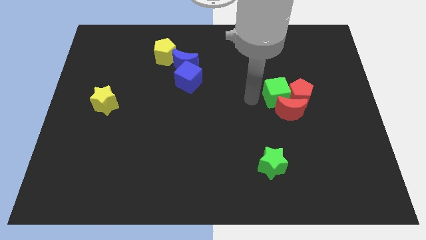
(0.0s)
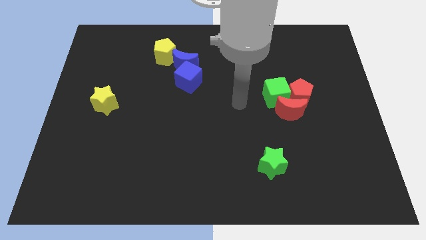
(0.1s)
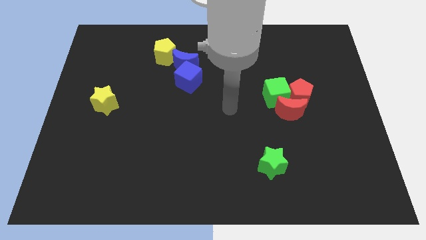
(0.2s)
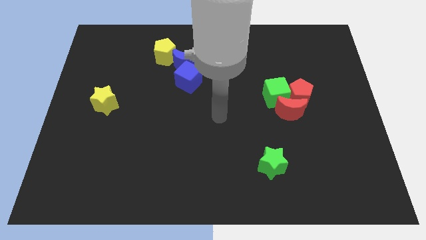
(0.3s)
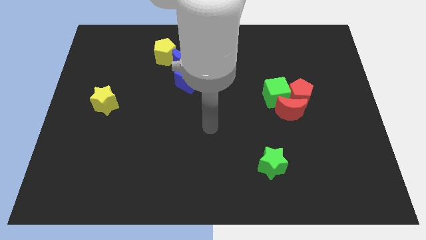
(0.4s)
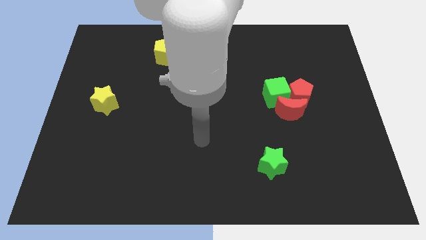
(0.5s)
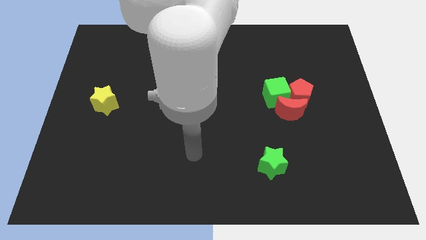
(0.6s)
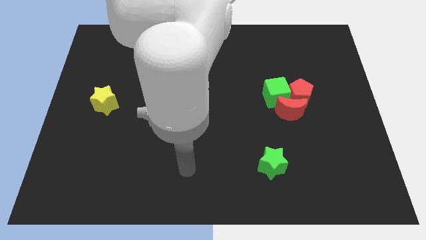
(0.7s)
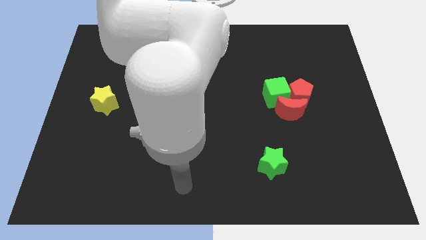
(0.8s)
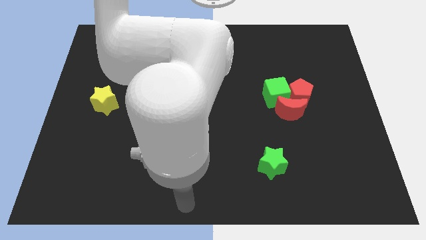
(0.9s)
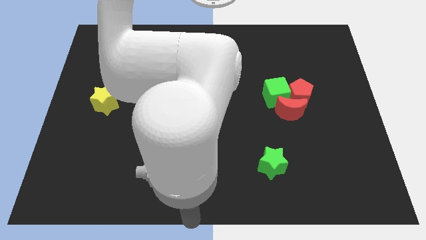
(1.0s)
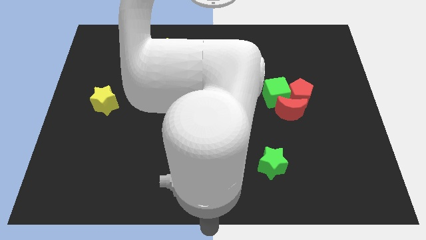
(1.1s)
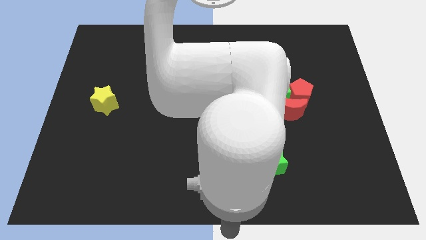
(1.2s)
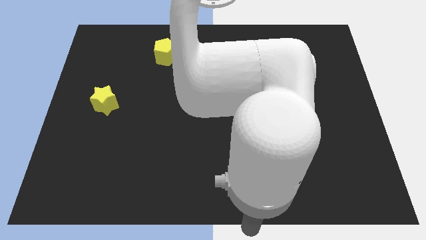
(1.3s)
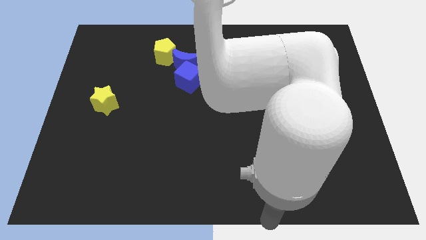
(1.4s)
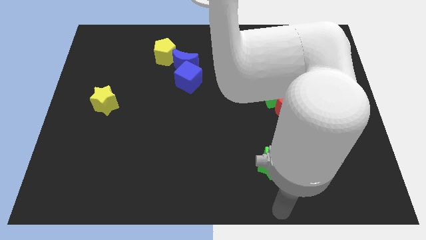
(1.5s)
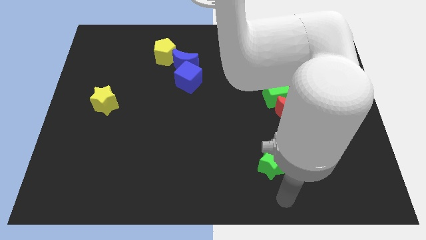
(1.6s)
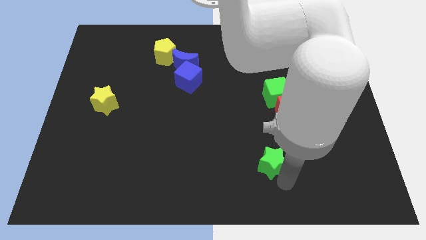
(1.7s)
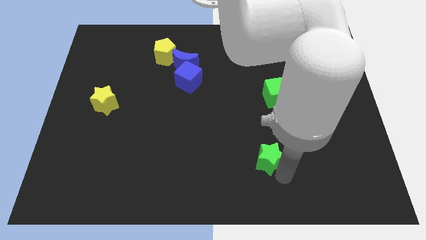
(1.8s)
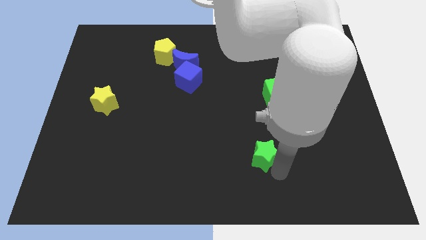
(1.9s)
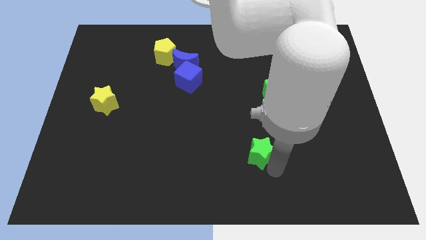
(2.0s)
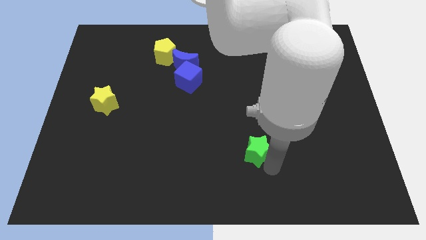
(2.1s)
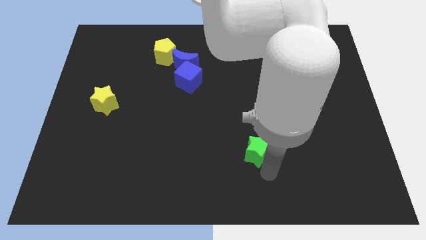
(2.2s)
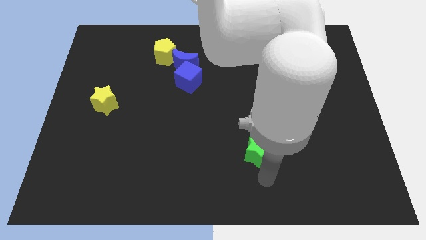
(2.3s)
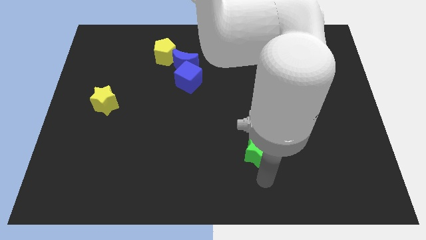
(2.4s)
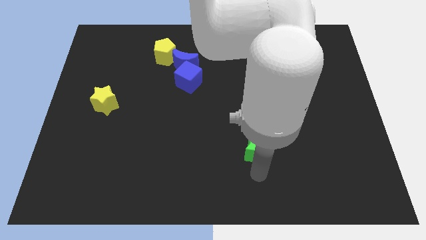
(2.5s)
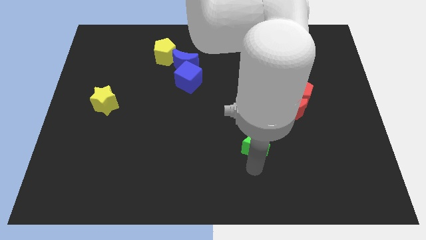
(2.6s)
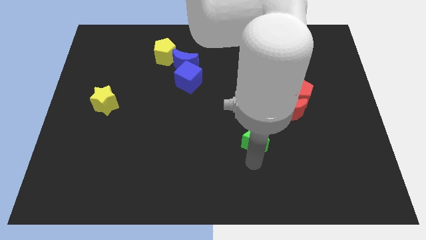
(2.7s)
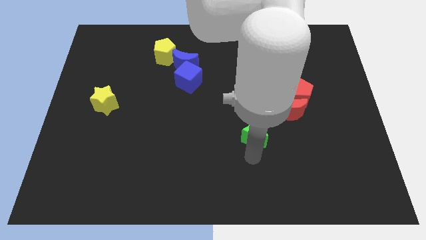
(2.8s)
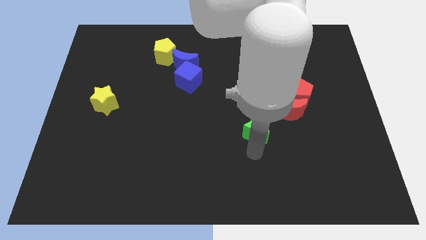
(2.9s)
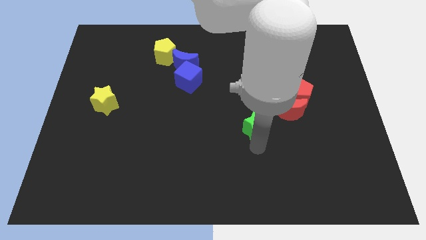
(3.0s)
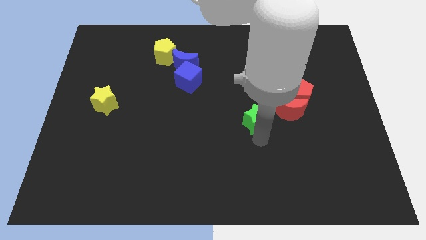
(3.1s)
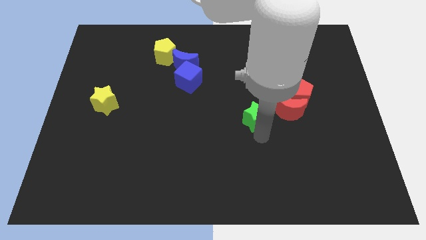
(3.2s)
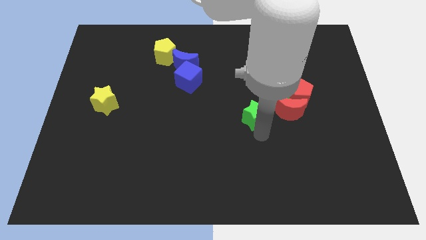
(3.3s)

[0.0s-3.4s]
move the green star to the left side of the red moon

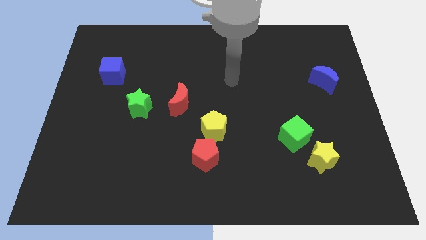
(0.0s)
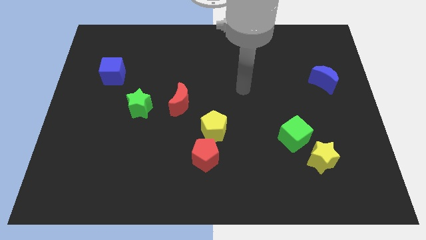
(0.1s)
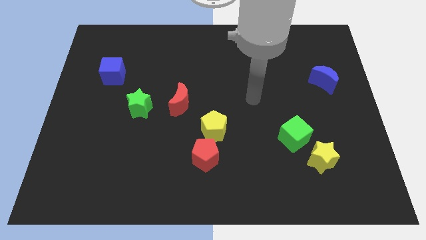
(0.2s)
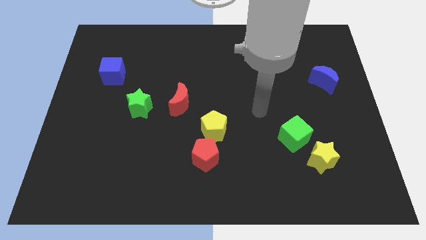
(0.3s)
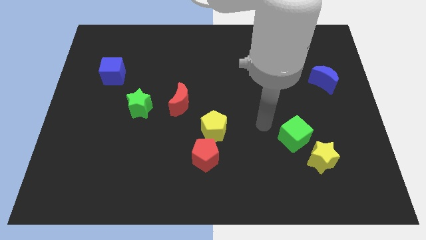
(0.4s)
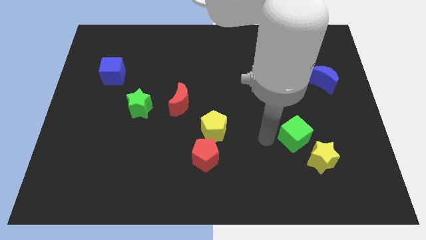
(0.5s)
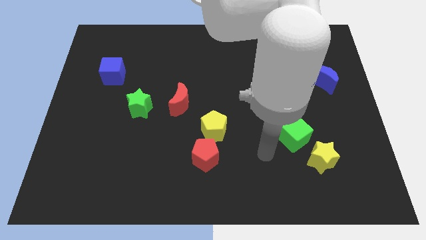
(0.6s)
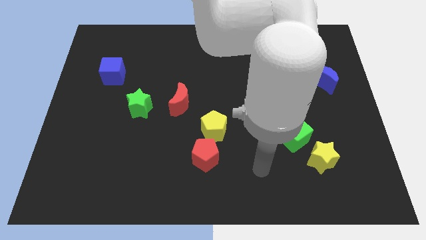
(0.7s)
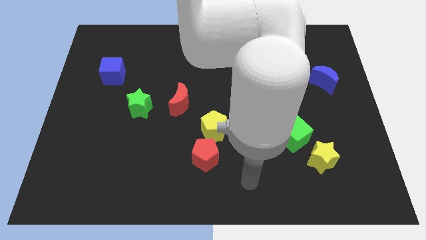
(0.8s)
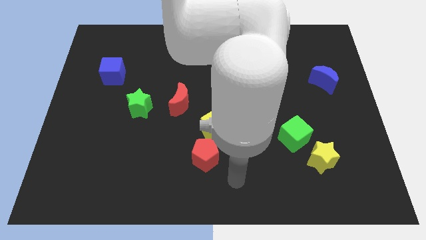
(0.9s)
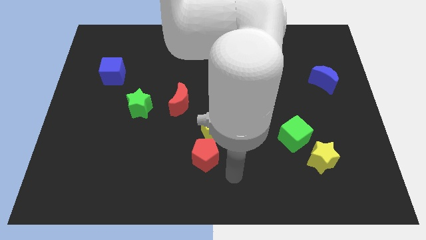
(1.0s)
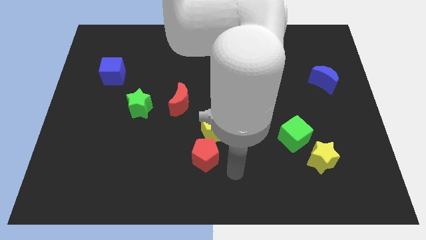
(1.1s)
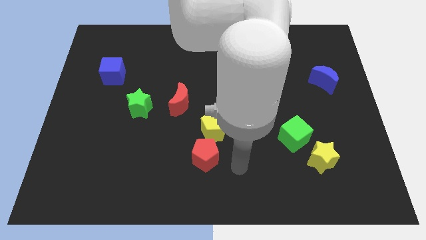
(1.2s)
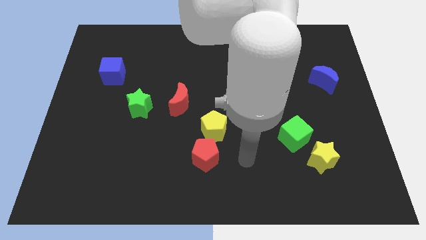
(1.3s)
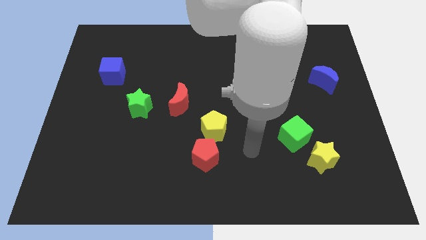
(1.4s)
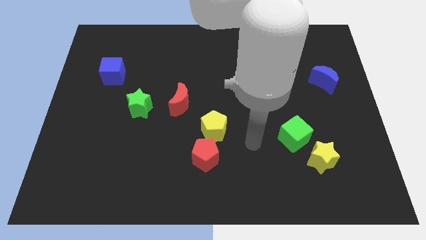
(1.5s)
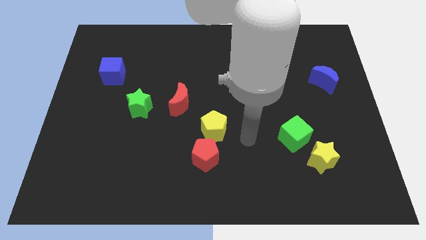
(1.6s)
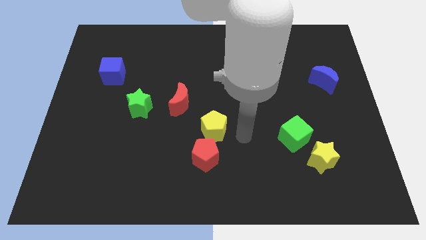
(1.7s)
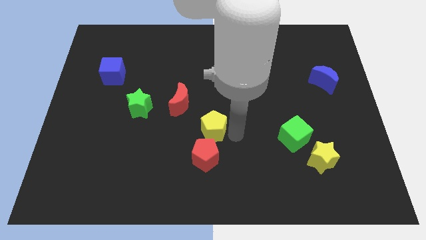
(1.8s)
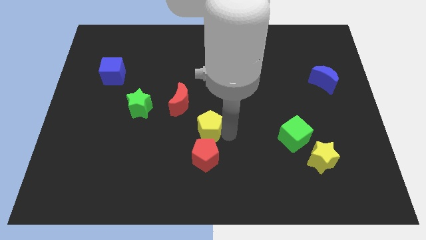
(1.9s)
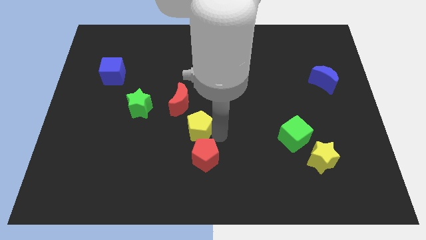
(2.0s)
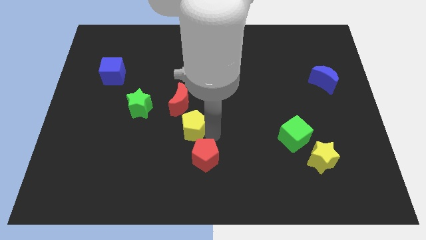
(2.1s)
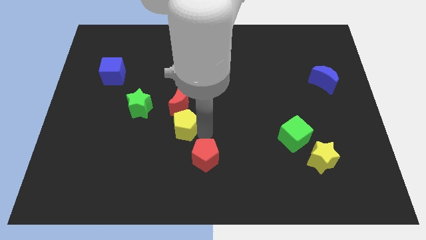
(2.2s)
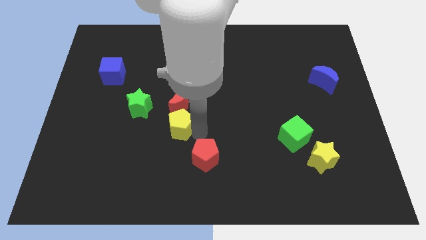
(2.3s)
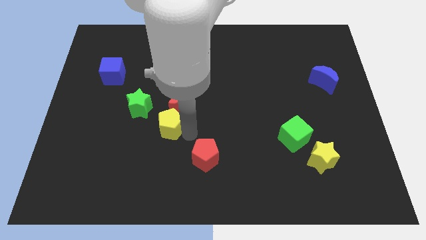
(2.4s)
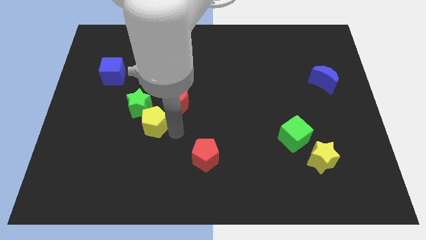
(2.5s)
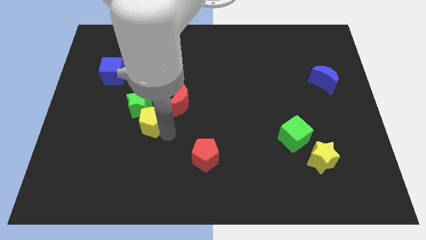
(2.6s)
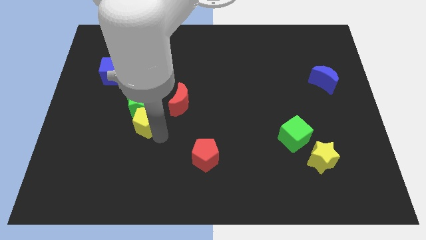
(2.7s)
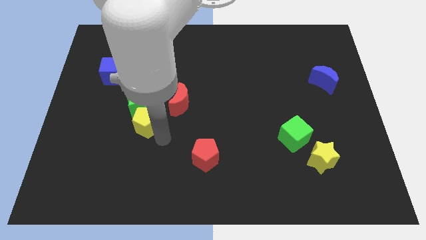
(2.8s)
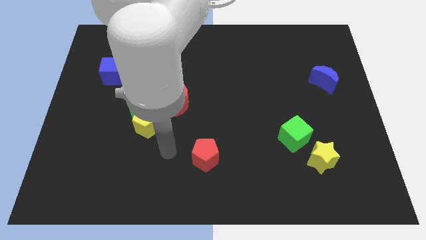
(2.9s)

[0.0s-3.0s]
move yellow pentagon below the green star

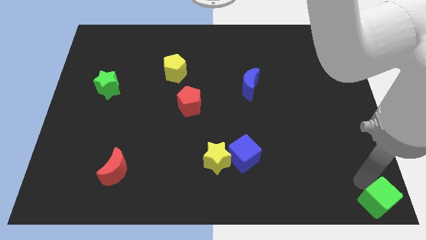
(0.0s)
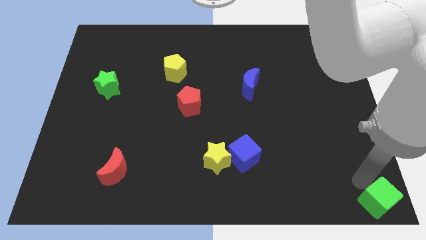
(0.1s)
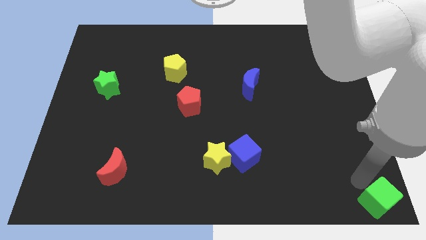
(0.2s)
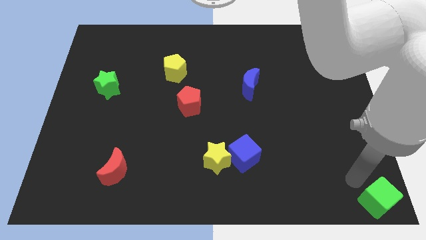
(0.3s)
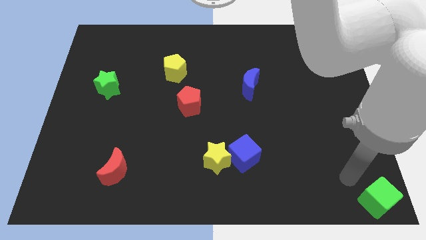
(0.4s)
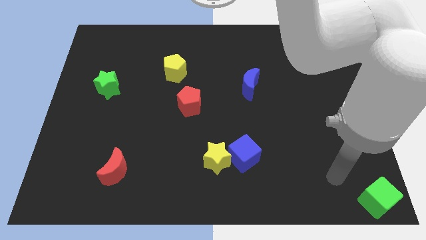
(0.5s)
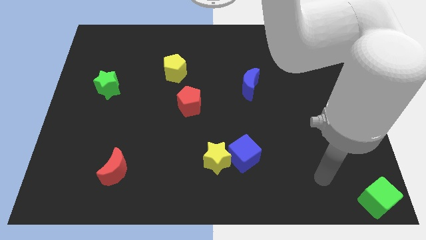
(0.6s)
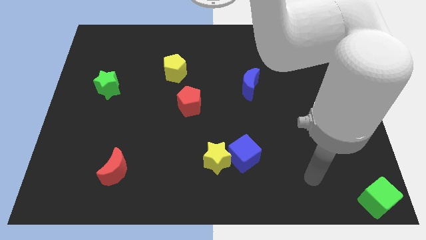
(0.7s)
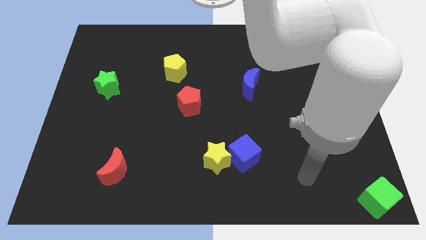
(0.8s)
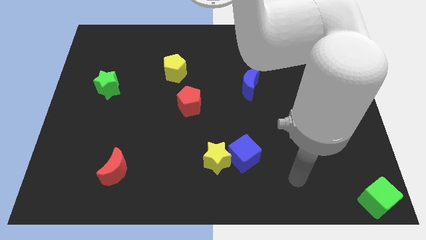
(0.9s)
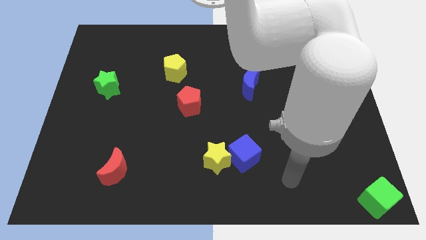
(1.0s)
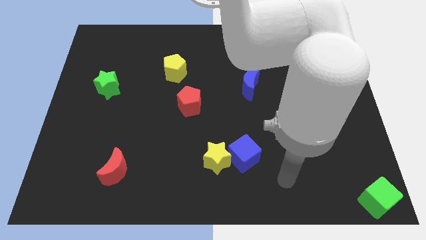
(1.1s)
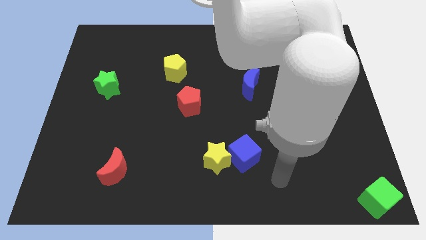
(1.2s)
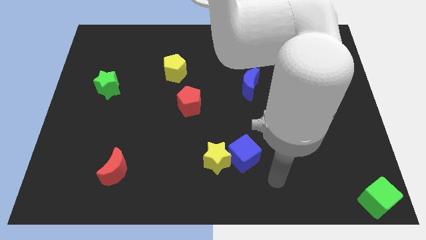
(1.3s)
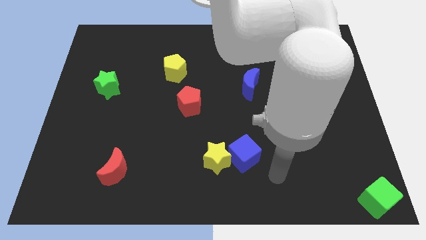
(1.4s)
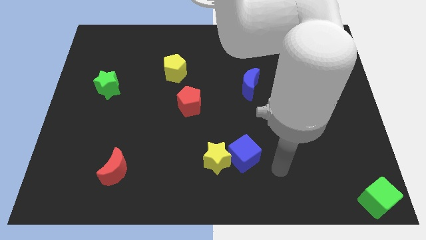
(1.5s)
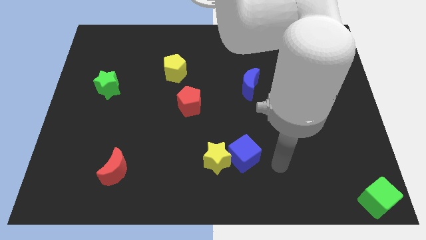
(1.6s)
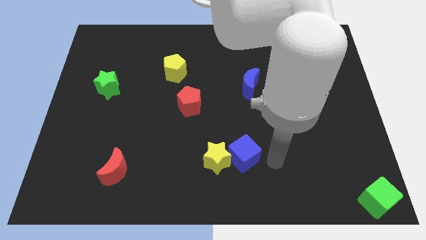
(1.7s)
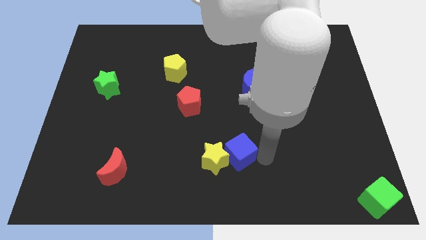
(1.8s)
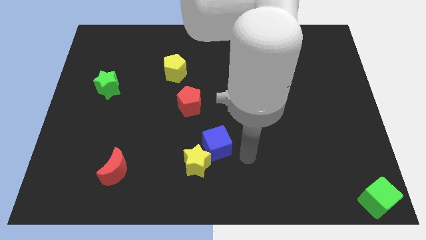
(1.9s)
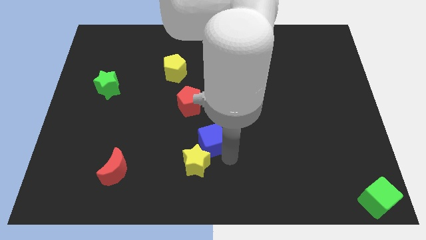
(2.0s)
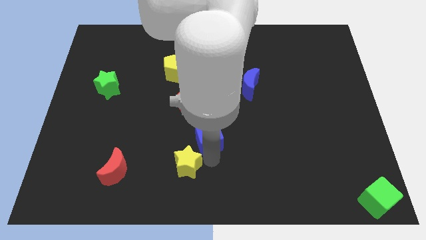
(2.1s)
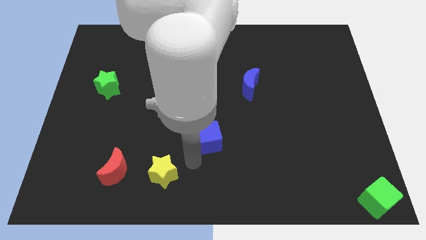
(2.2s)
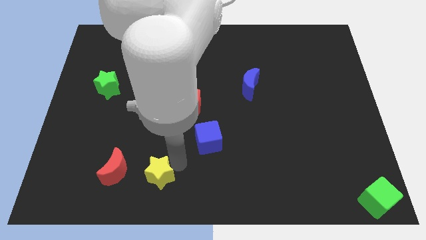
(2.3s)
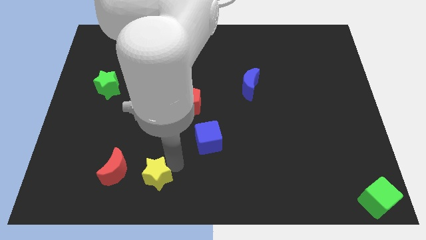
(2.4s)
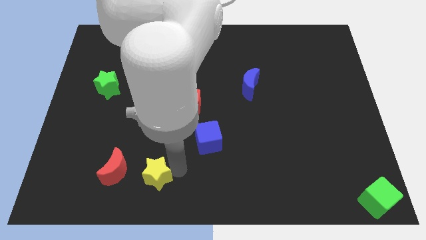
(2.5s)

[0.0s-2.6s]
separate the yellow star and blue cube
